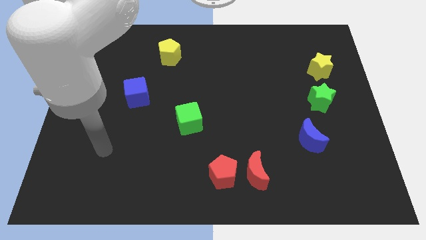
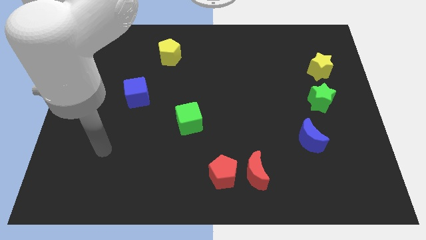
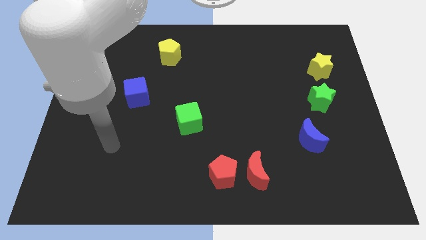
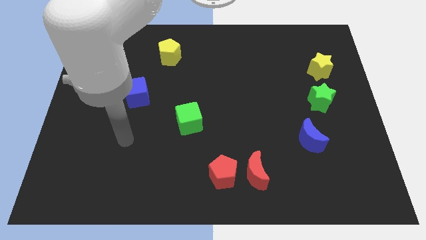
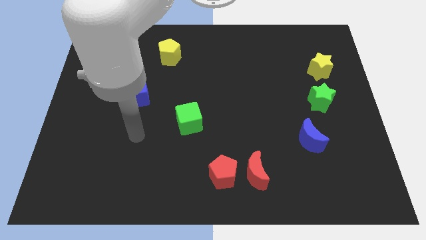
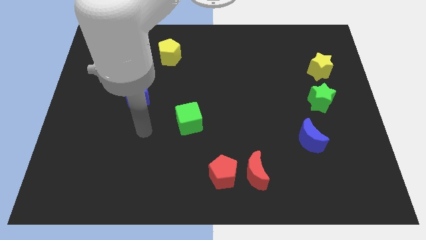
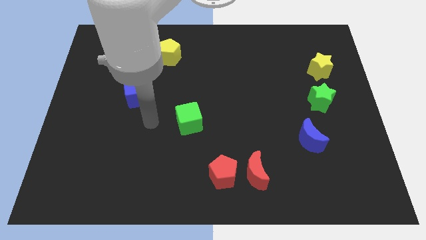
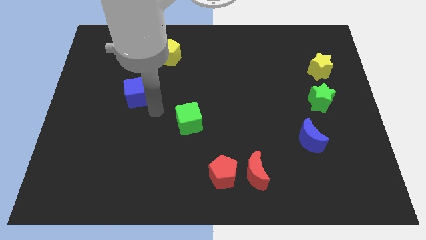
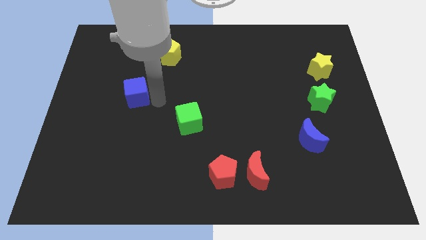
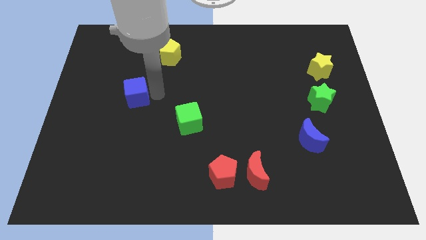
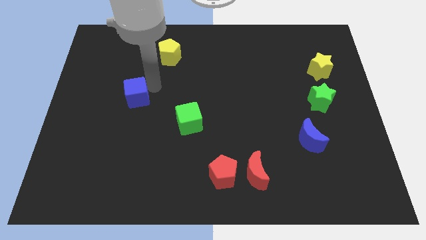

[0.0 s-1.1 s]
slide your arm to the right of blue cube

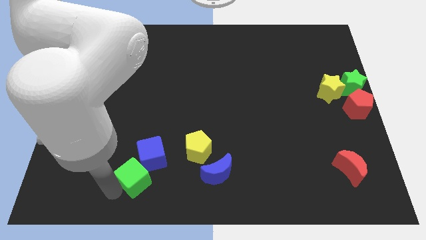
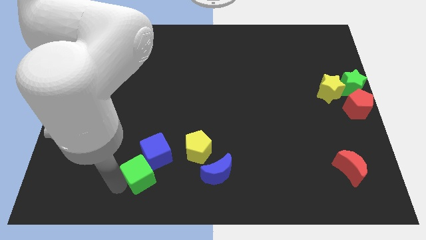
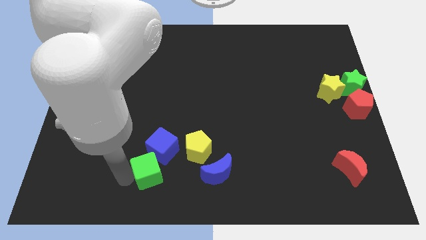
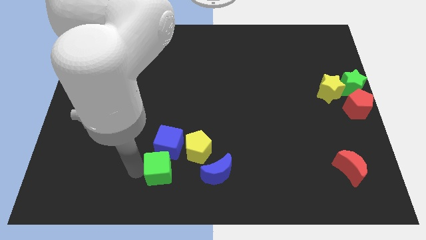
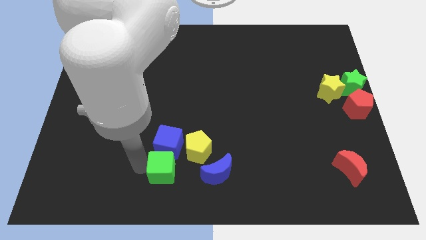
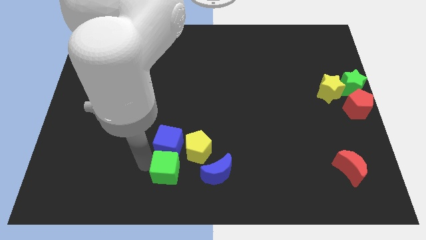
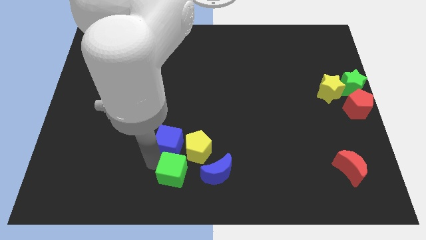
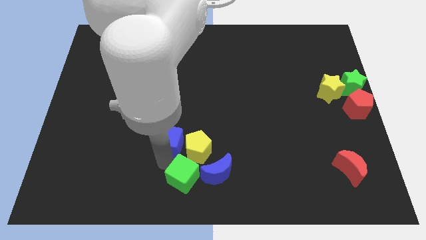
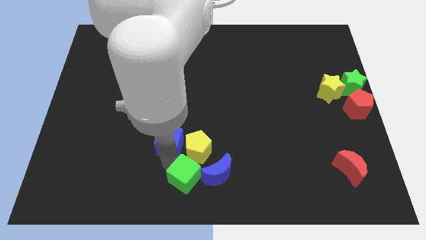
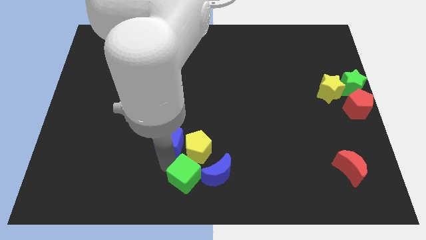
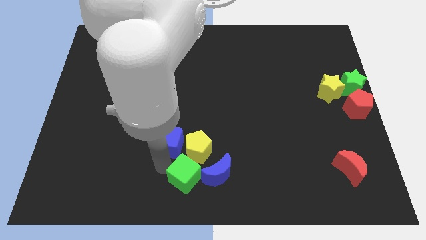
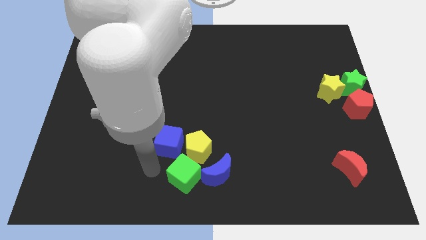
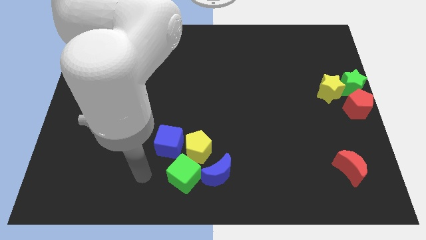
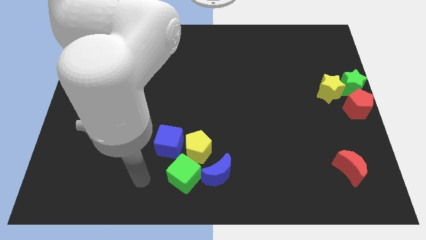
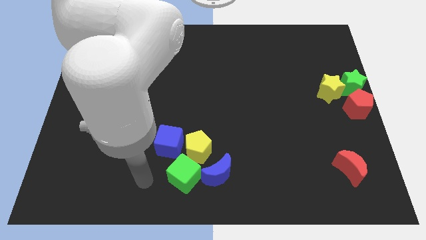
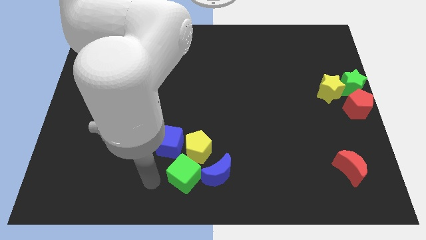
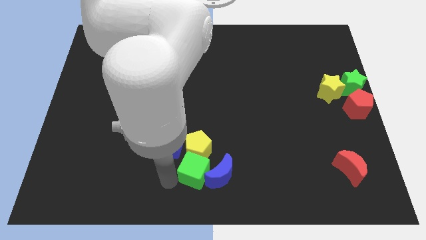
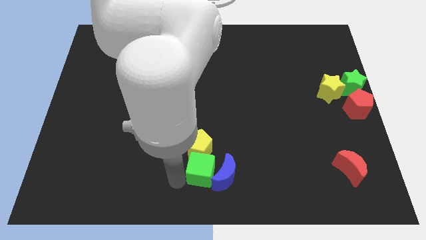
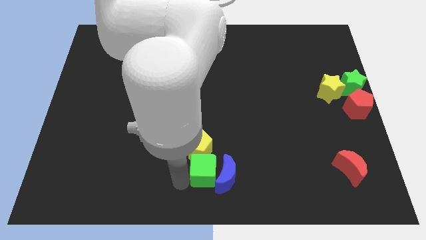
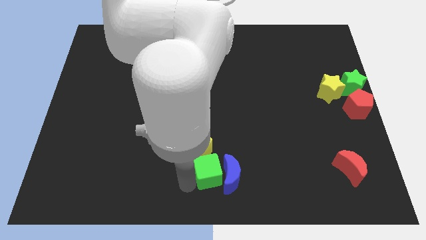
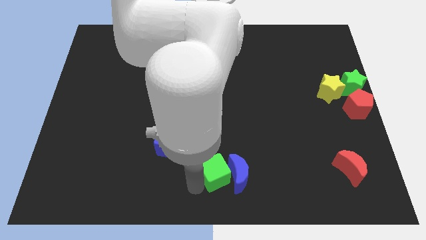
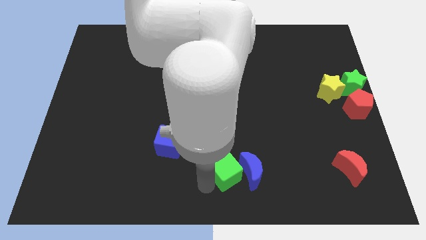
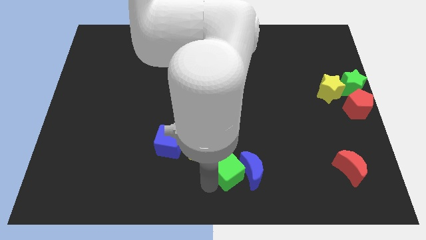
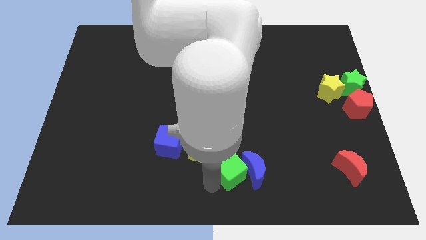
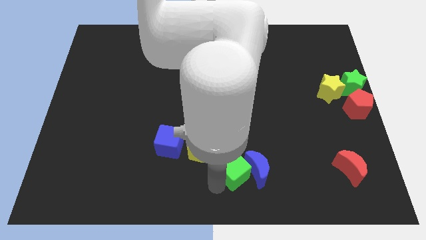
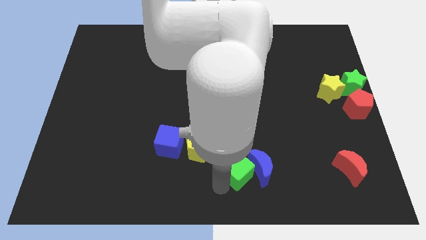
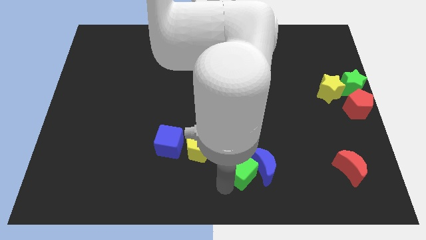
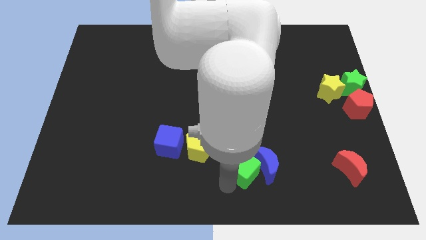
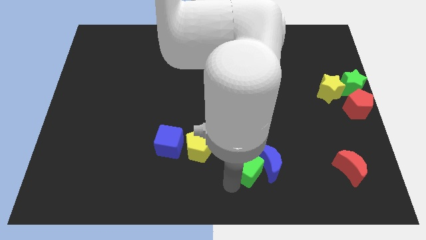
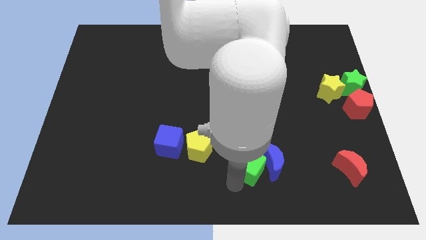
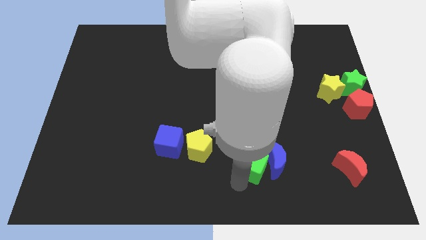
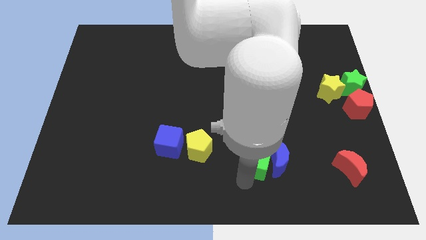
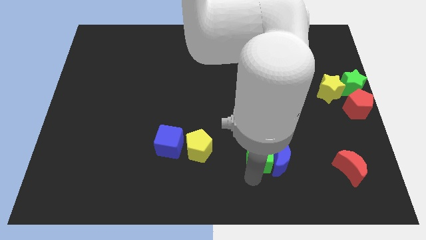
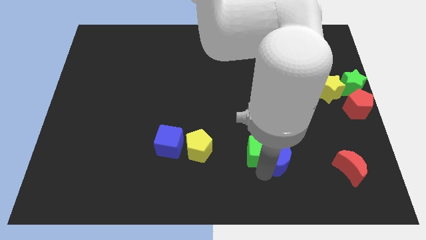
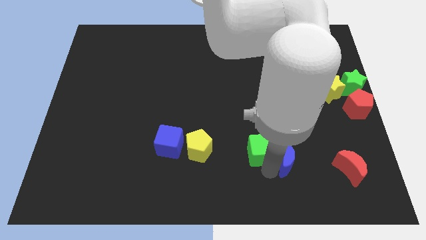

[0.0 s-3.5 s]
place the green cube and the blue moon in between the yellow pentagon and the red moon

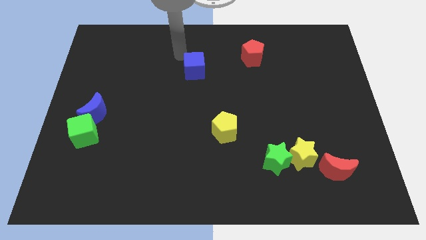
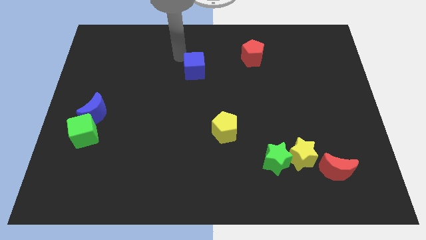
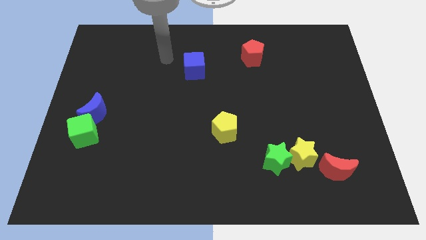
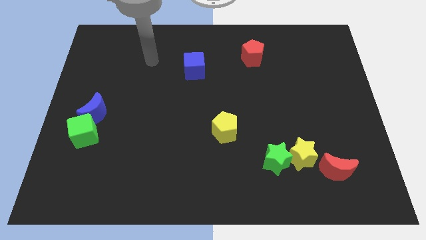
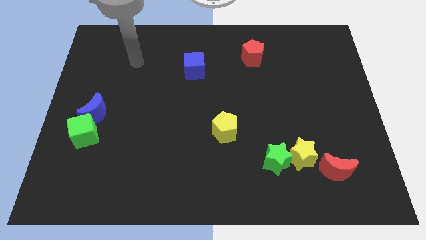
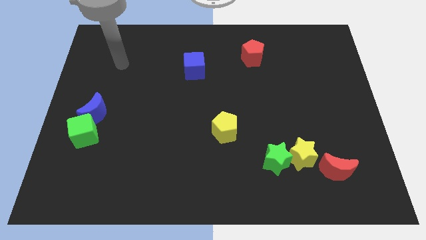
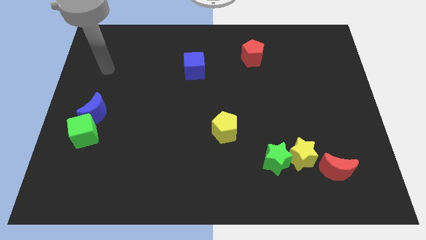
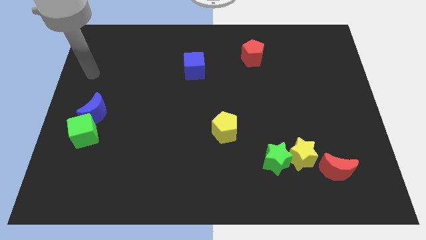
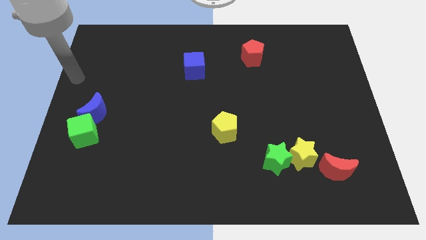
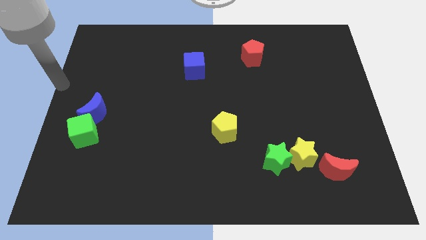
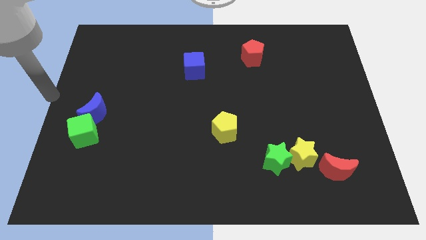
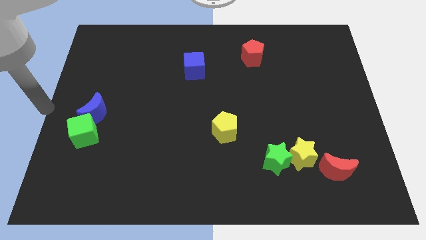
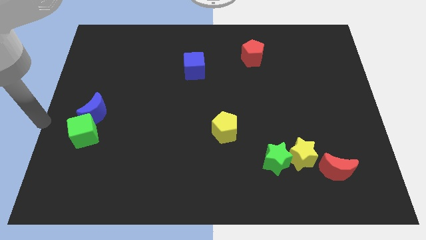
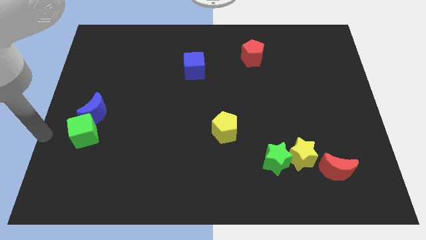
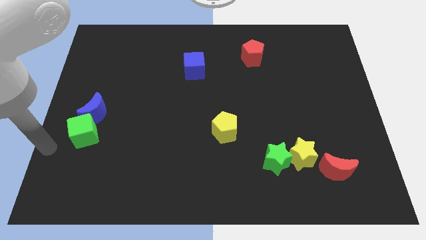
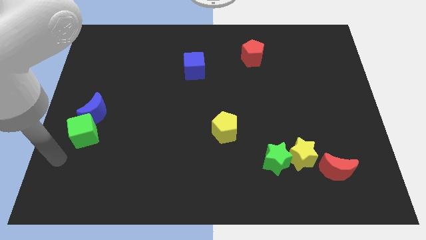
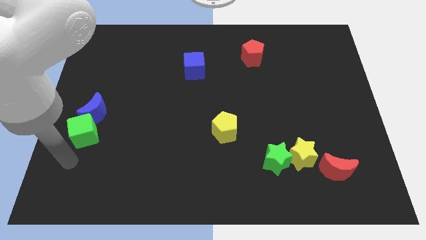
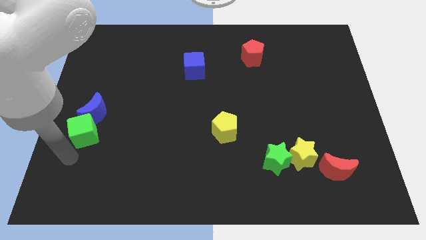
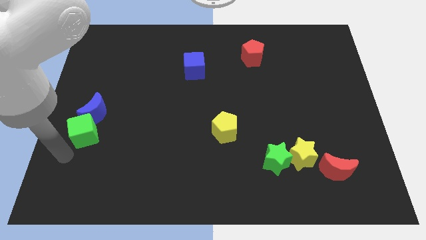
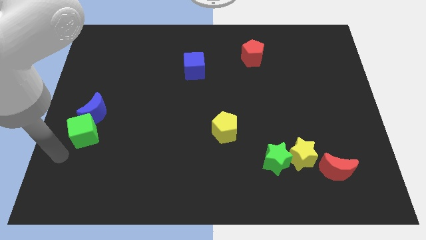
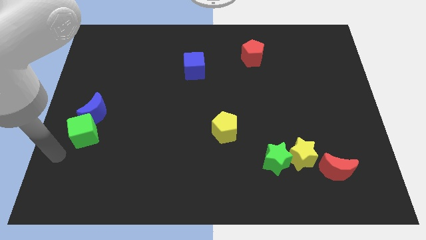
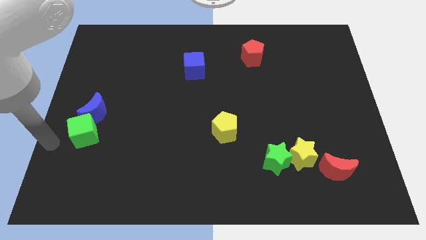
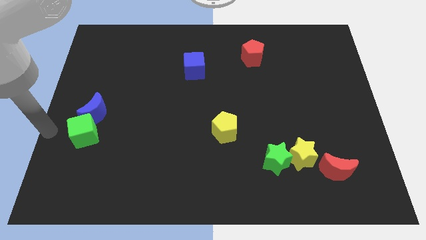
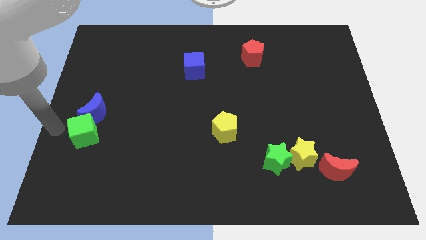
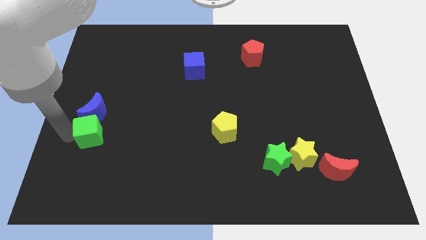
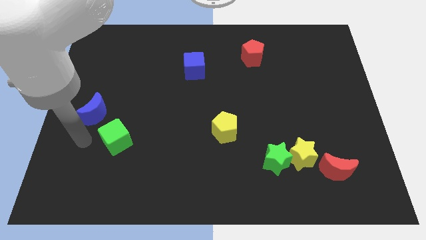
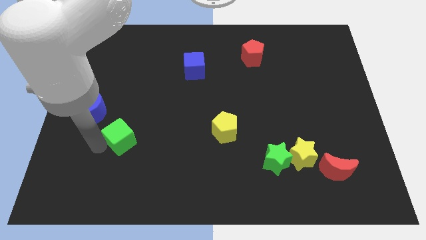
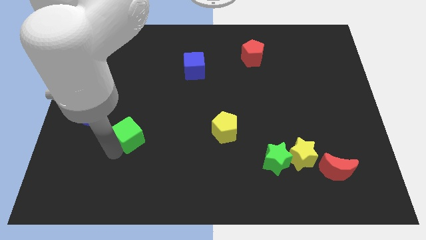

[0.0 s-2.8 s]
push green cube to right side

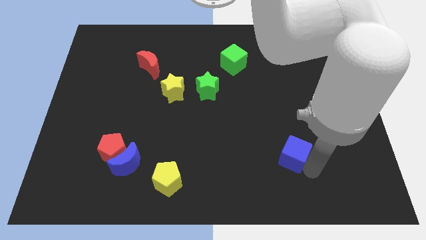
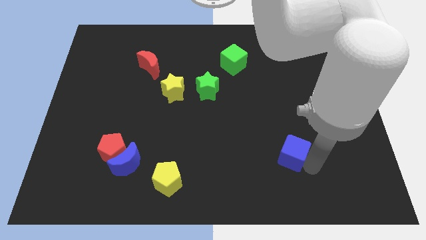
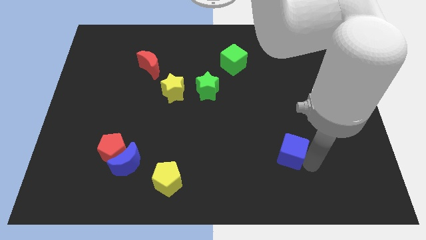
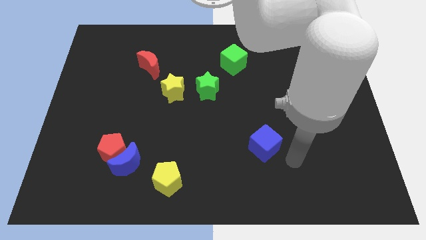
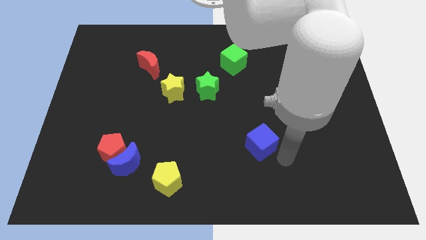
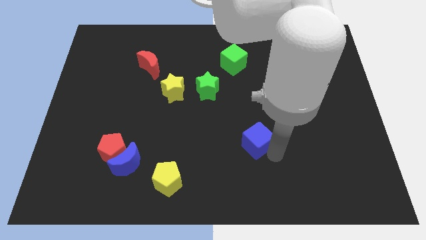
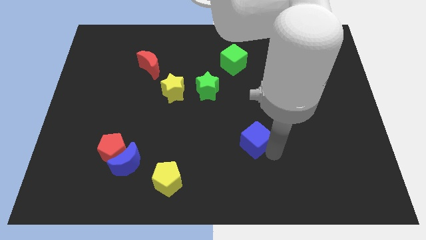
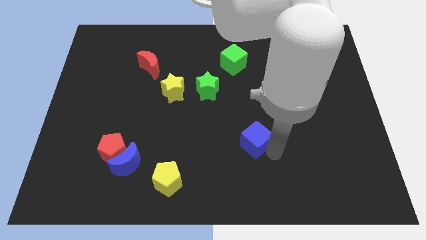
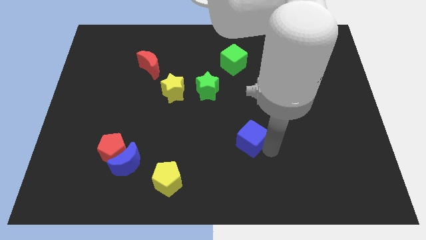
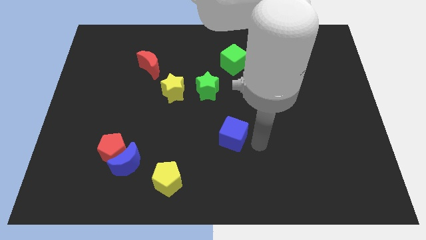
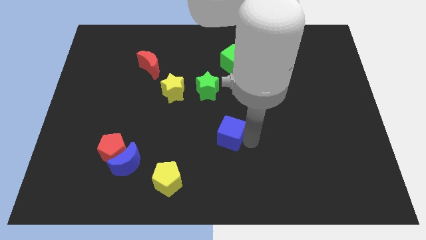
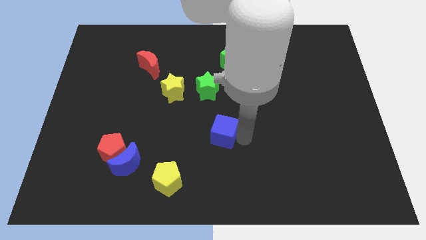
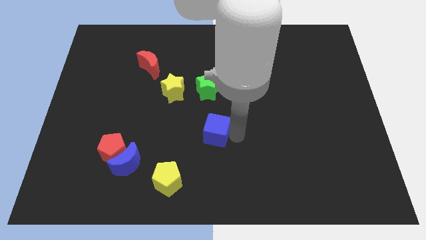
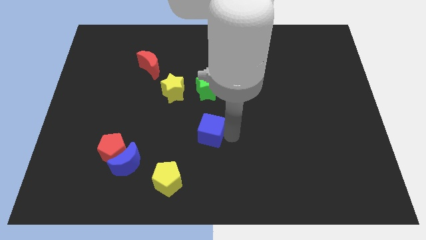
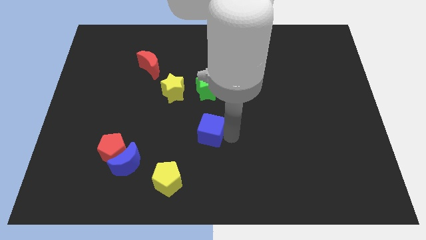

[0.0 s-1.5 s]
place blue cube to the center of the board
